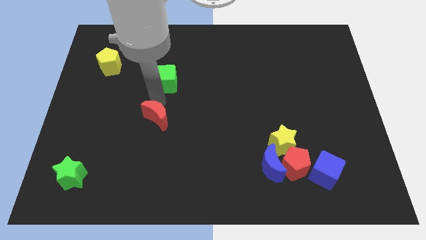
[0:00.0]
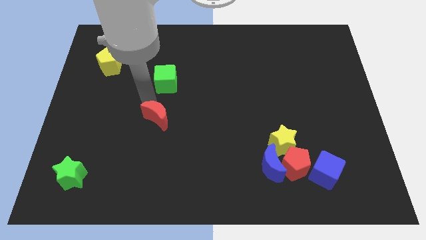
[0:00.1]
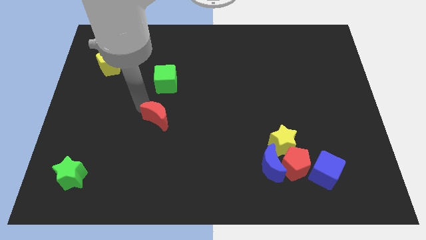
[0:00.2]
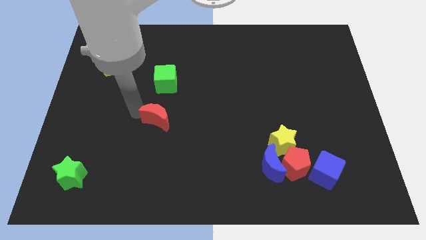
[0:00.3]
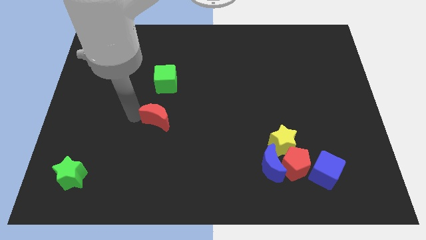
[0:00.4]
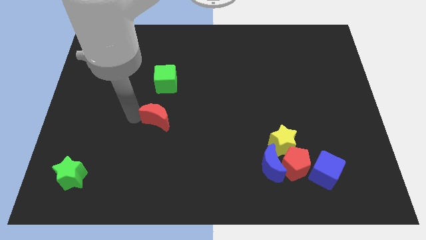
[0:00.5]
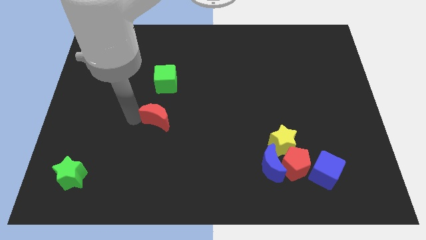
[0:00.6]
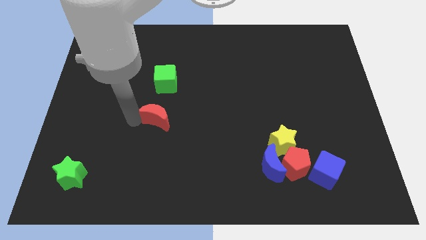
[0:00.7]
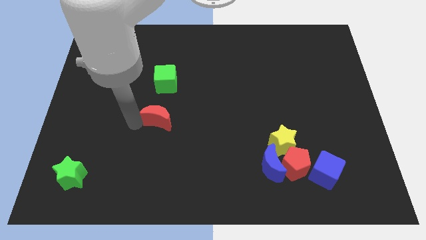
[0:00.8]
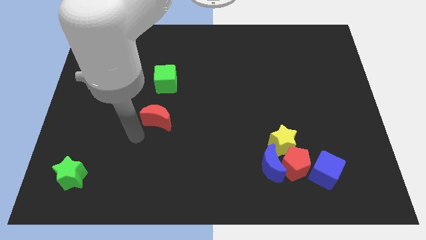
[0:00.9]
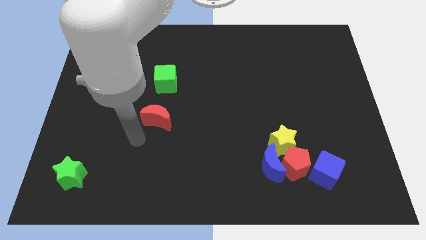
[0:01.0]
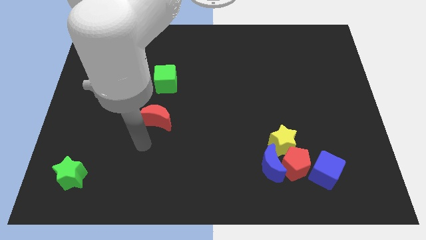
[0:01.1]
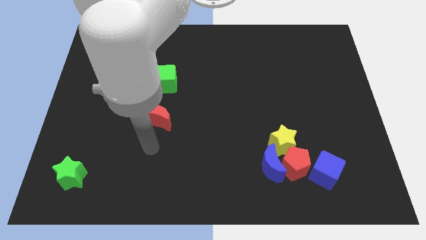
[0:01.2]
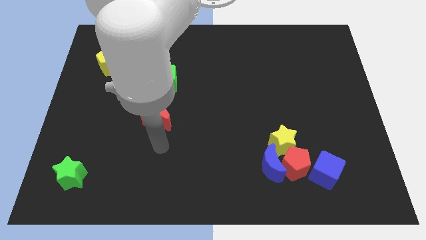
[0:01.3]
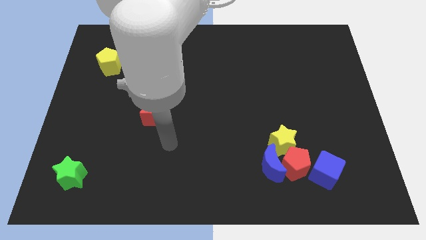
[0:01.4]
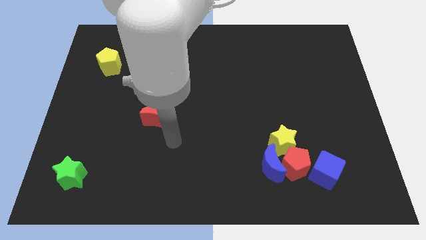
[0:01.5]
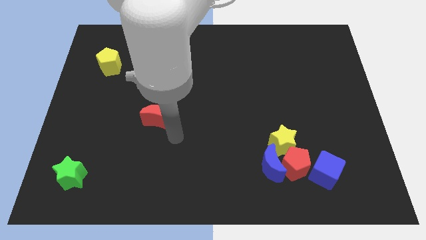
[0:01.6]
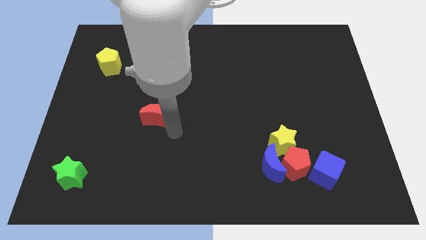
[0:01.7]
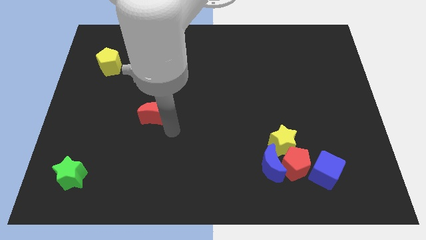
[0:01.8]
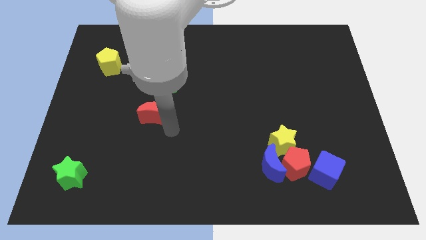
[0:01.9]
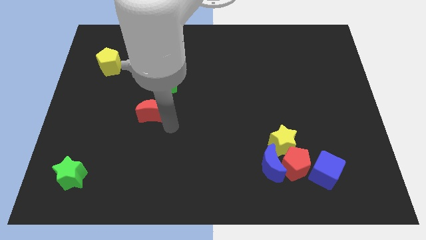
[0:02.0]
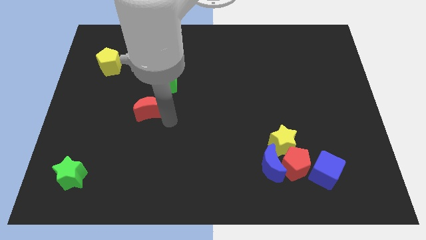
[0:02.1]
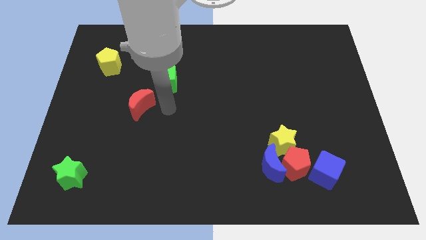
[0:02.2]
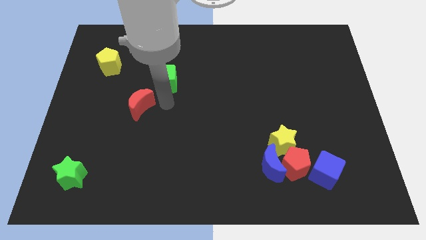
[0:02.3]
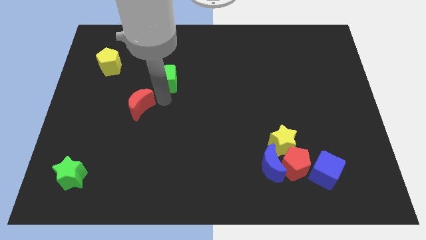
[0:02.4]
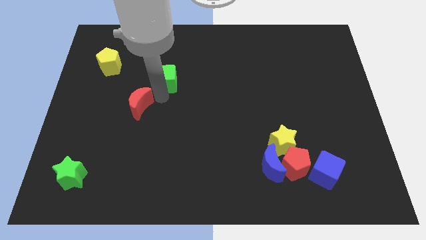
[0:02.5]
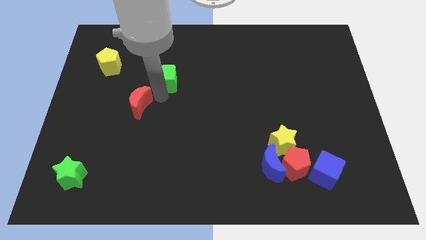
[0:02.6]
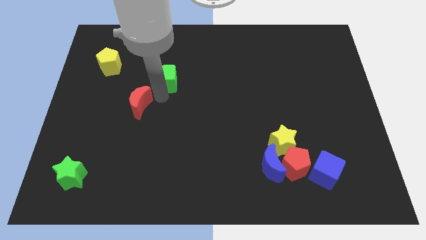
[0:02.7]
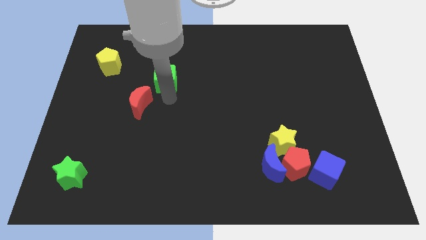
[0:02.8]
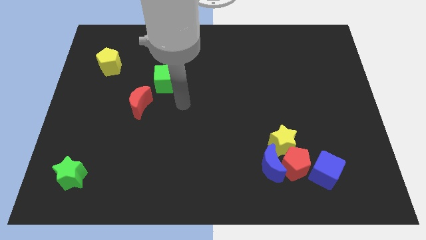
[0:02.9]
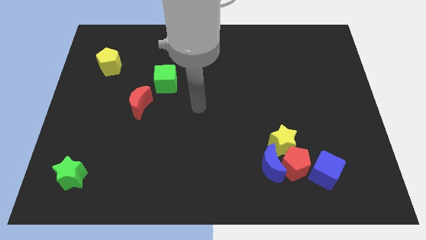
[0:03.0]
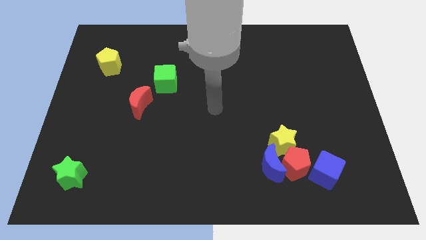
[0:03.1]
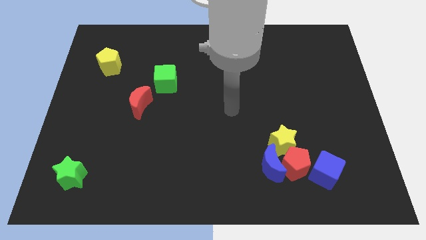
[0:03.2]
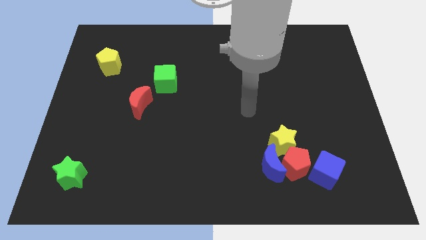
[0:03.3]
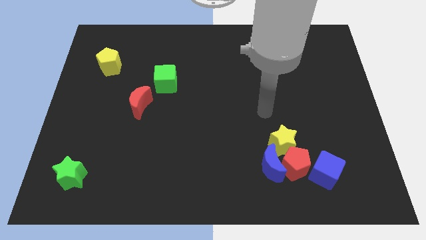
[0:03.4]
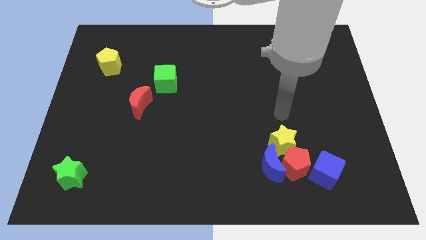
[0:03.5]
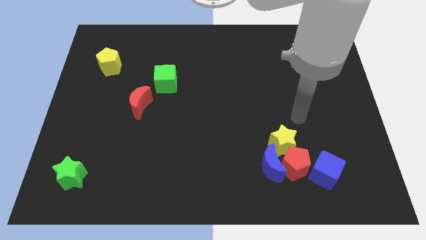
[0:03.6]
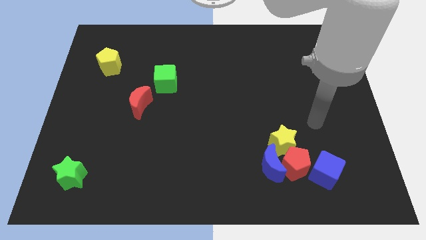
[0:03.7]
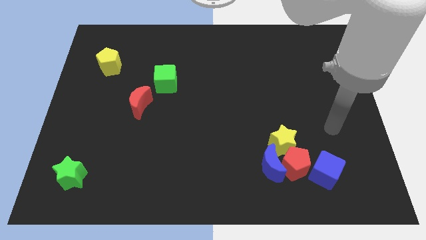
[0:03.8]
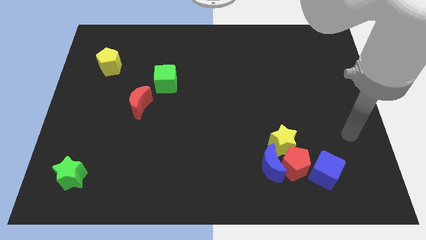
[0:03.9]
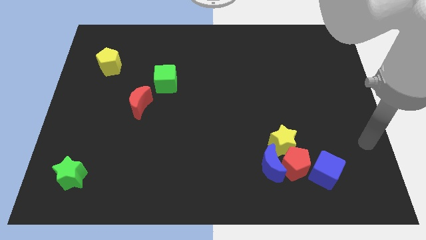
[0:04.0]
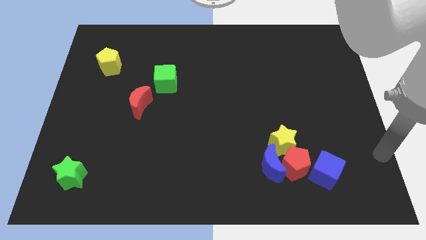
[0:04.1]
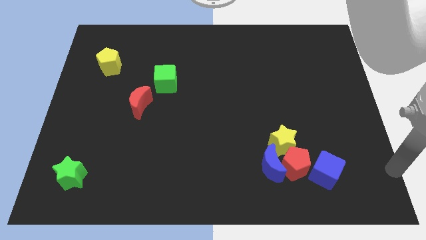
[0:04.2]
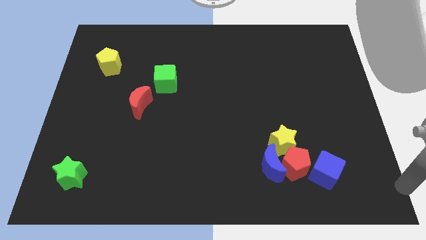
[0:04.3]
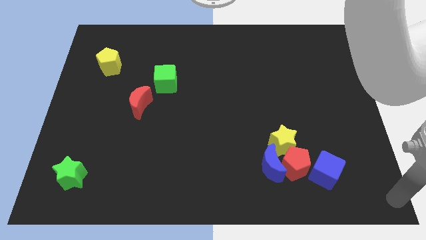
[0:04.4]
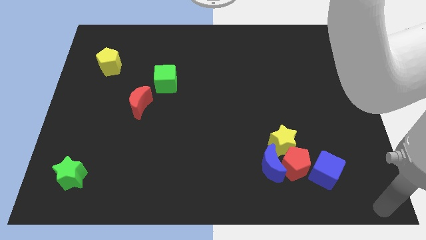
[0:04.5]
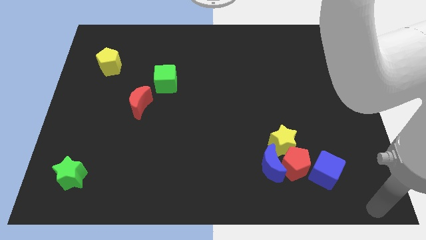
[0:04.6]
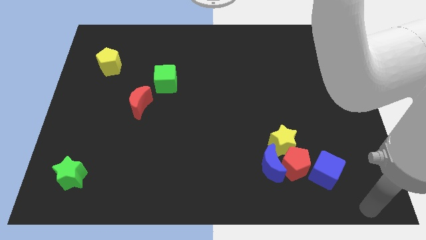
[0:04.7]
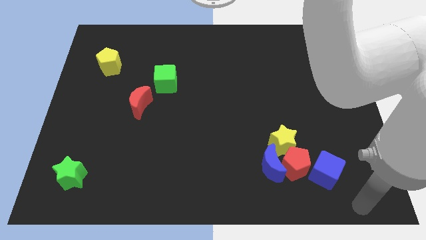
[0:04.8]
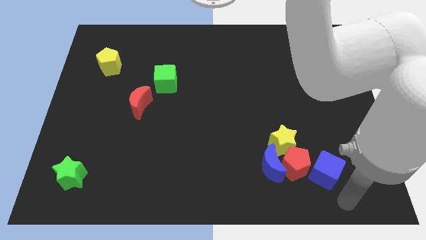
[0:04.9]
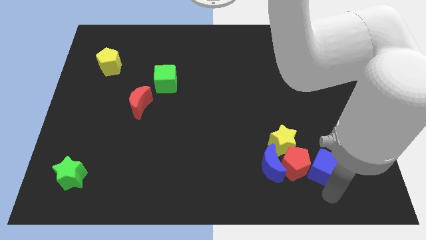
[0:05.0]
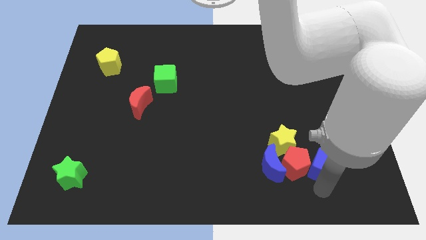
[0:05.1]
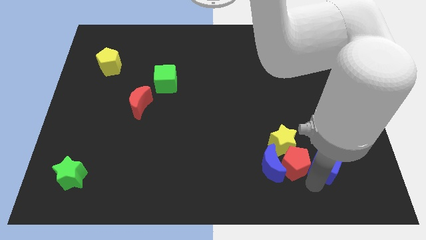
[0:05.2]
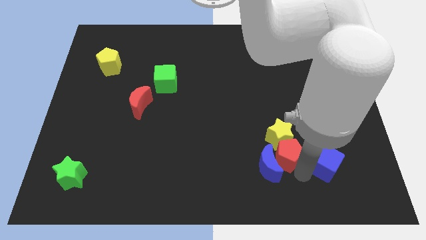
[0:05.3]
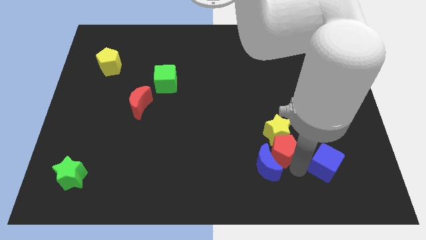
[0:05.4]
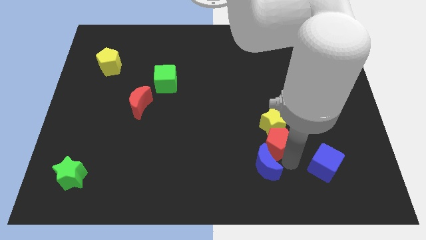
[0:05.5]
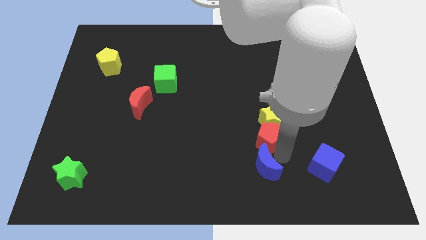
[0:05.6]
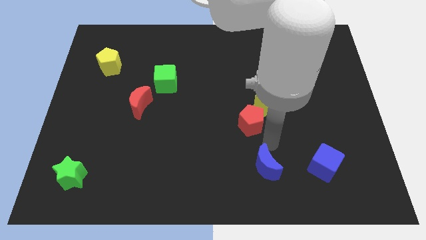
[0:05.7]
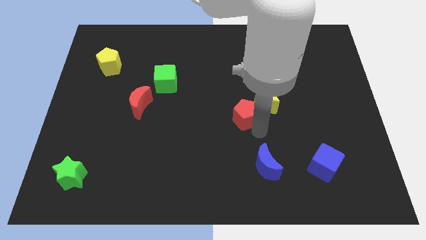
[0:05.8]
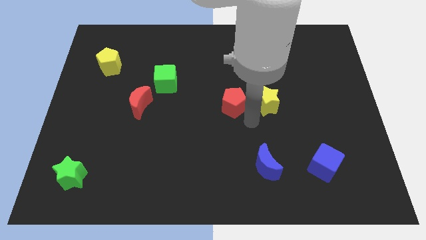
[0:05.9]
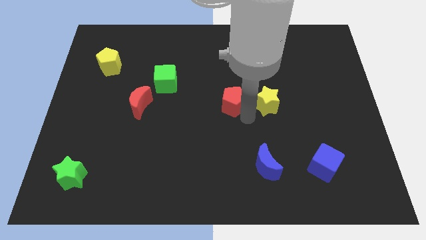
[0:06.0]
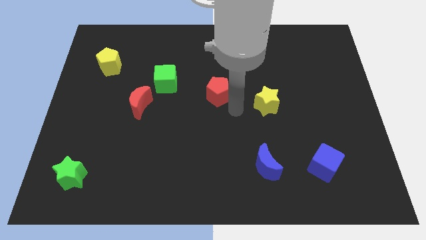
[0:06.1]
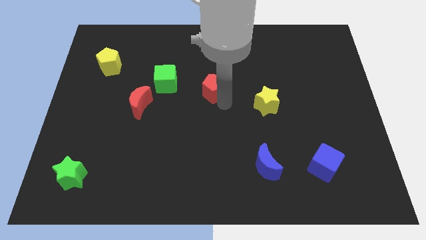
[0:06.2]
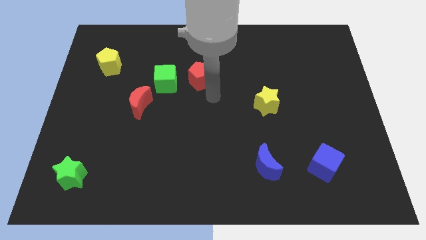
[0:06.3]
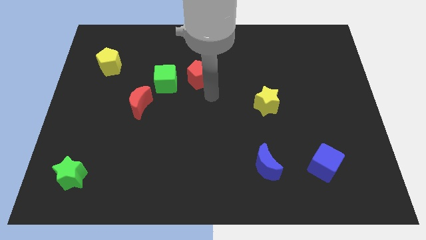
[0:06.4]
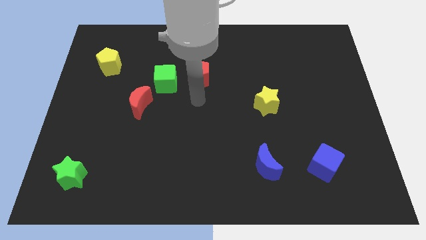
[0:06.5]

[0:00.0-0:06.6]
separate the red pentagon from the blue blocks

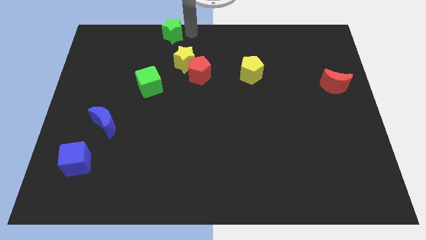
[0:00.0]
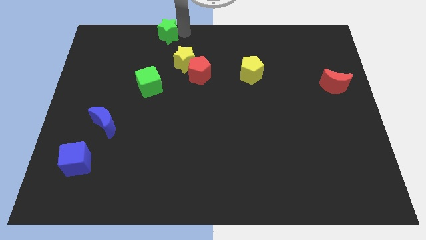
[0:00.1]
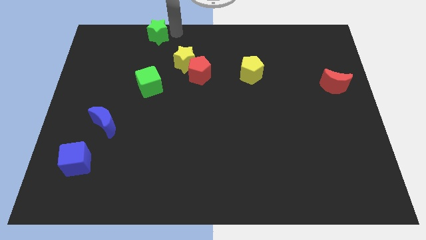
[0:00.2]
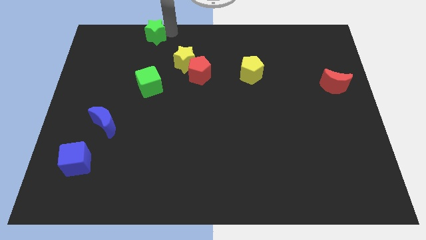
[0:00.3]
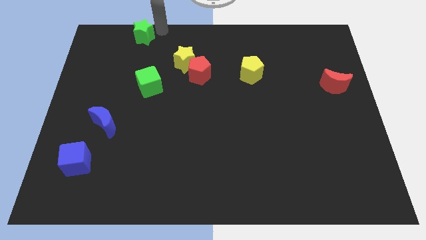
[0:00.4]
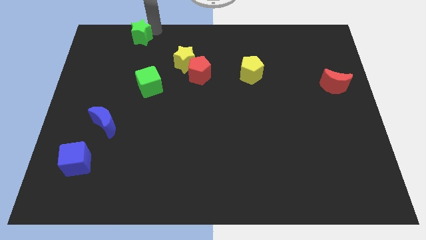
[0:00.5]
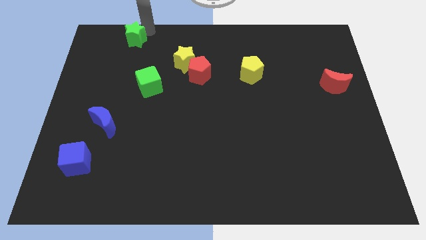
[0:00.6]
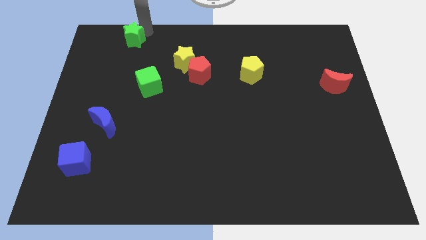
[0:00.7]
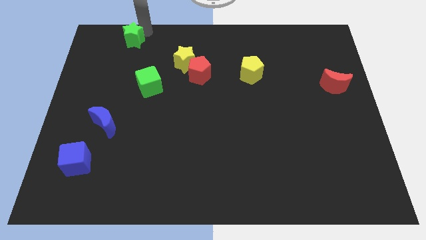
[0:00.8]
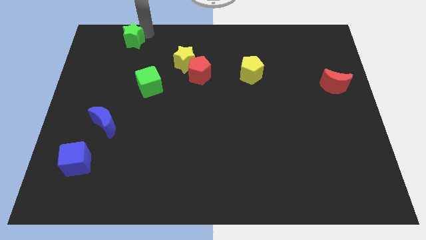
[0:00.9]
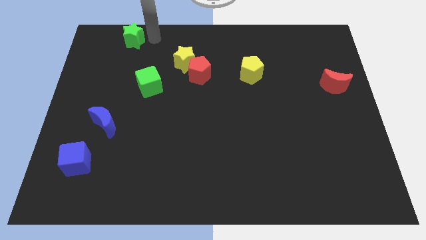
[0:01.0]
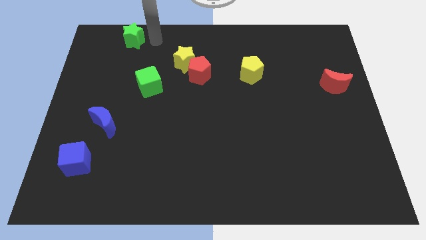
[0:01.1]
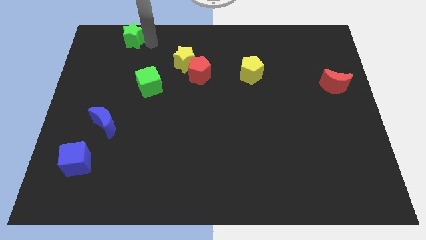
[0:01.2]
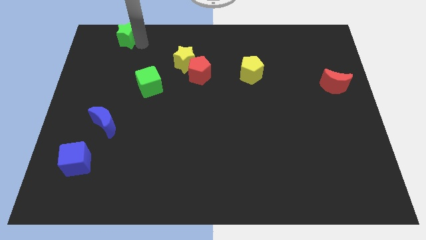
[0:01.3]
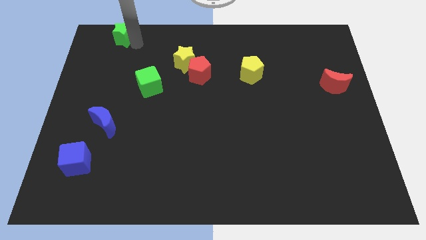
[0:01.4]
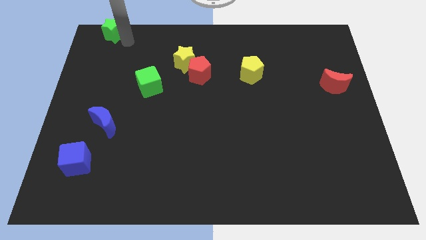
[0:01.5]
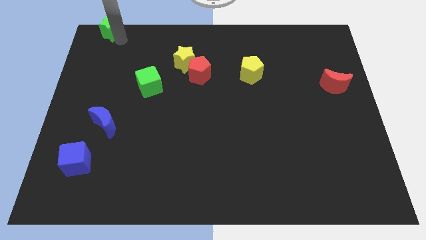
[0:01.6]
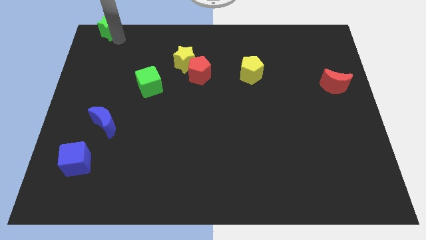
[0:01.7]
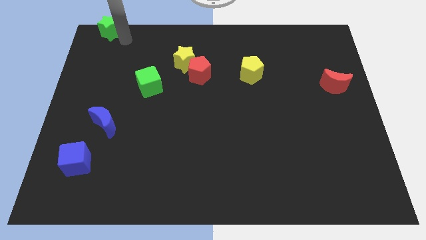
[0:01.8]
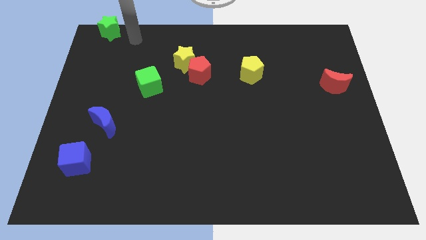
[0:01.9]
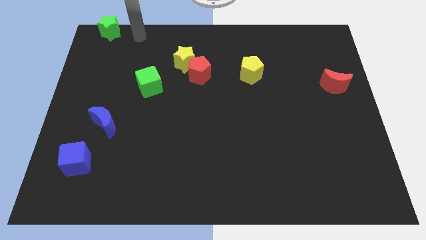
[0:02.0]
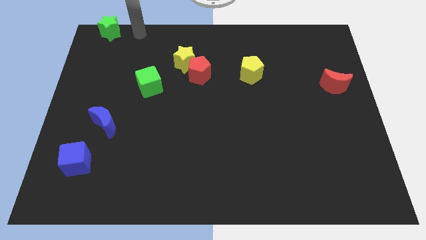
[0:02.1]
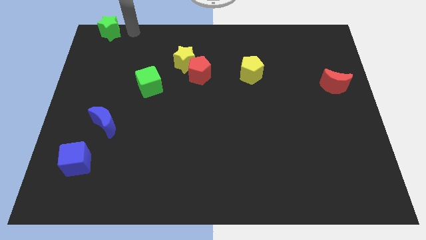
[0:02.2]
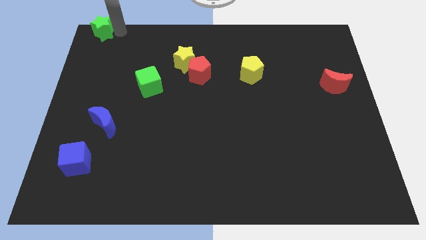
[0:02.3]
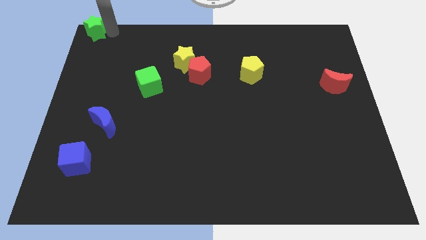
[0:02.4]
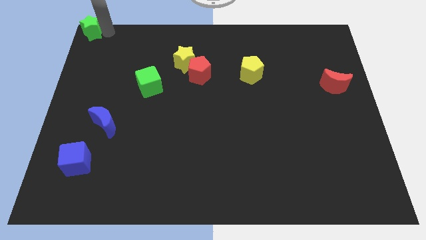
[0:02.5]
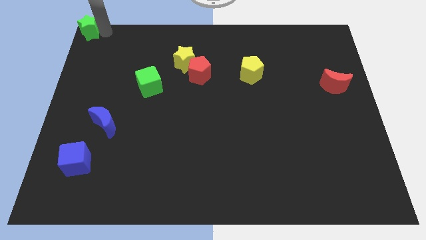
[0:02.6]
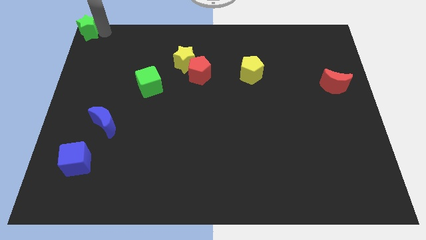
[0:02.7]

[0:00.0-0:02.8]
slide the green star to the top left corner
